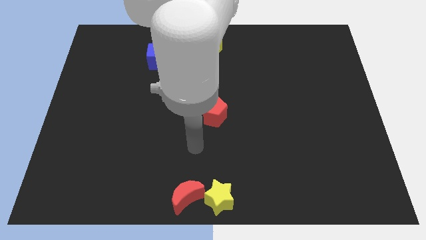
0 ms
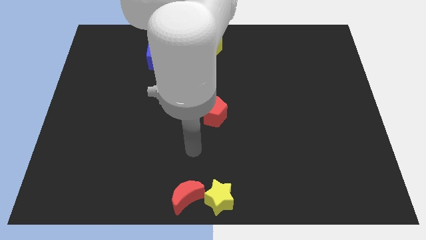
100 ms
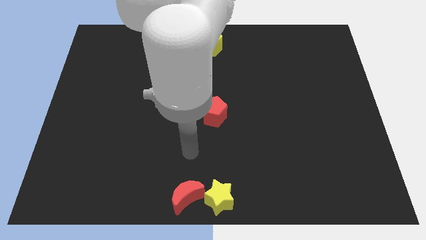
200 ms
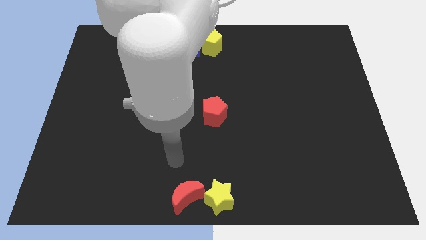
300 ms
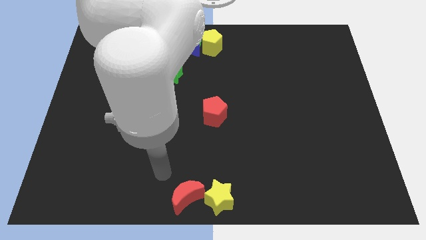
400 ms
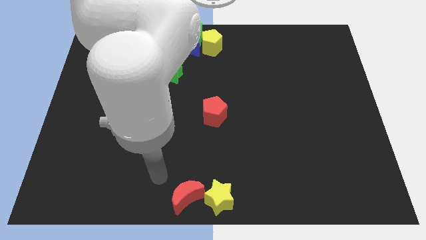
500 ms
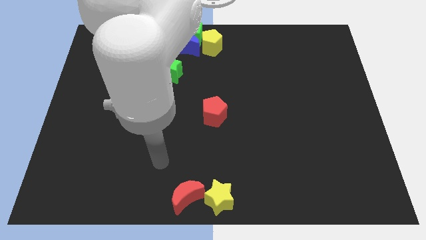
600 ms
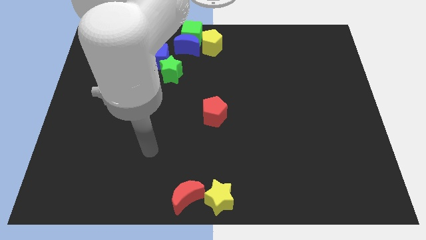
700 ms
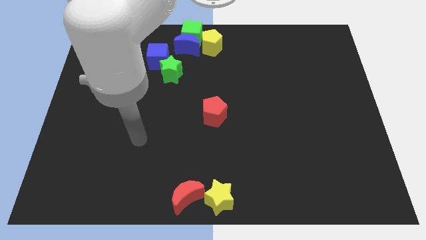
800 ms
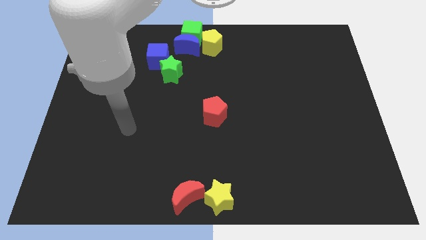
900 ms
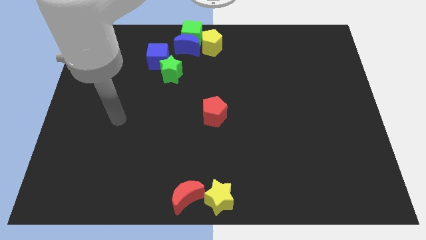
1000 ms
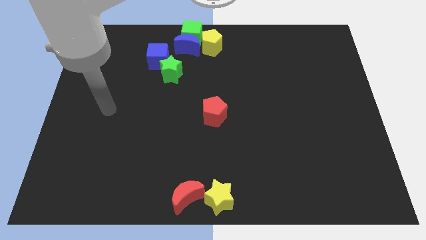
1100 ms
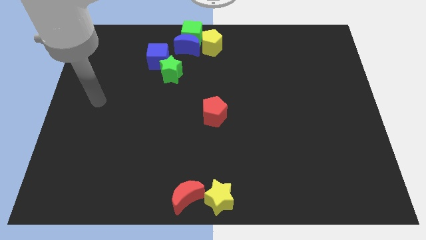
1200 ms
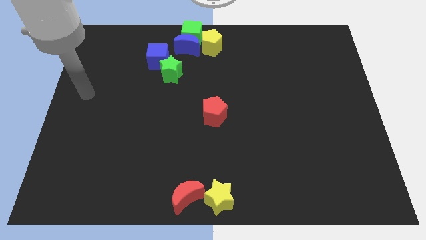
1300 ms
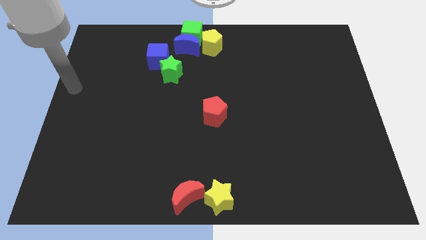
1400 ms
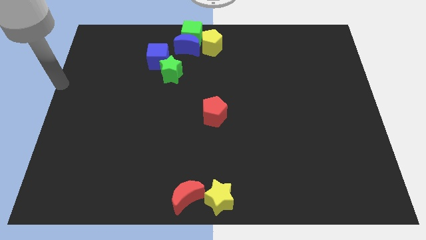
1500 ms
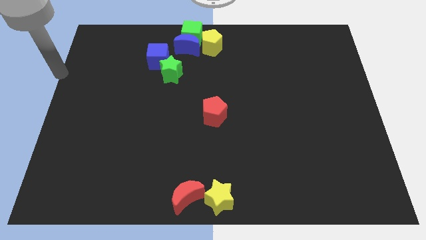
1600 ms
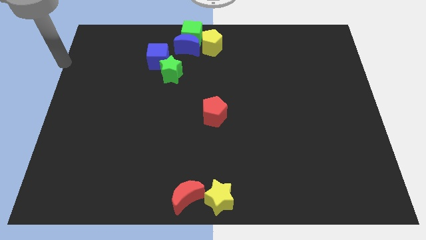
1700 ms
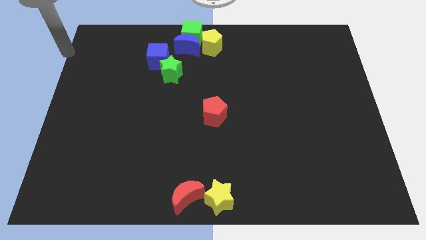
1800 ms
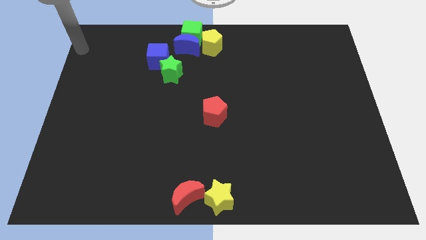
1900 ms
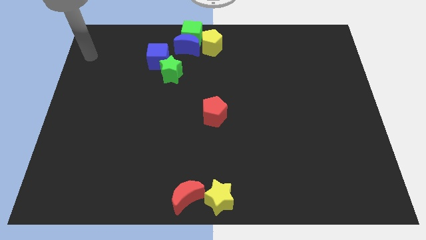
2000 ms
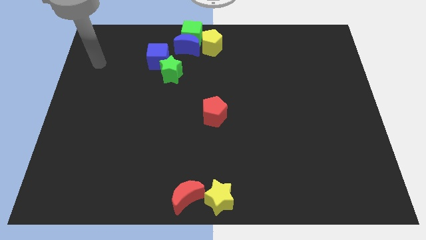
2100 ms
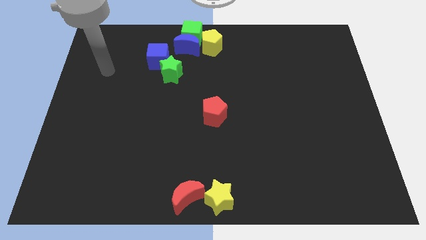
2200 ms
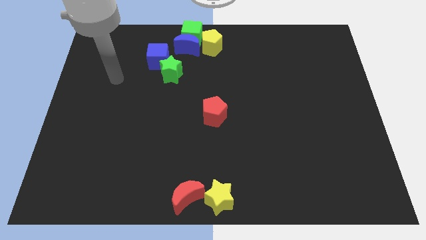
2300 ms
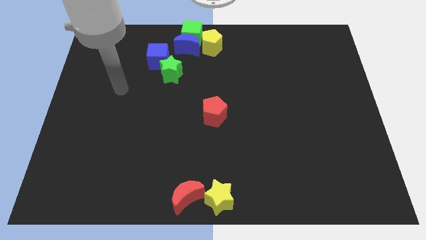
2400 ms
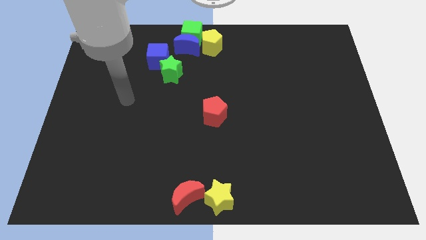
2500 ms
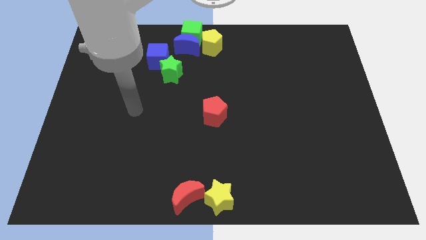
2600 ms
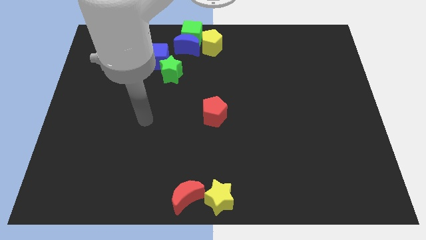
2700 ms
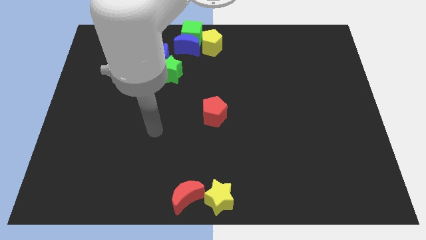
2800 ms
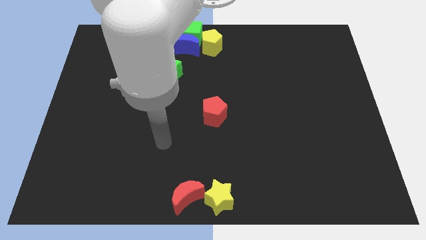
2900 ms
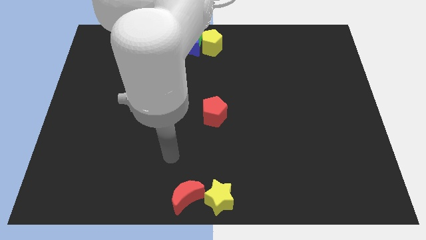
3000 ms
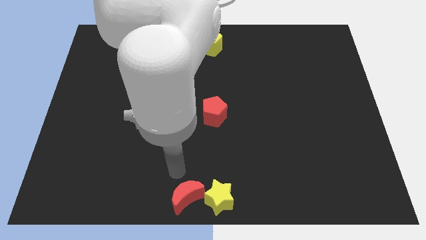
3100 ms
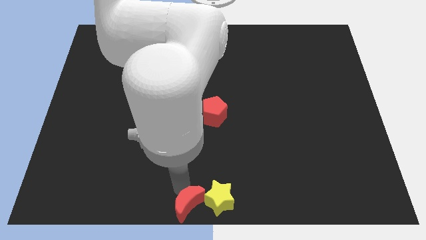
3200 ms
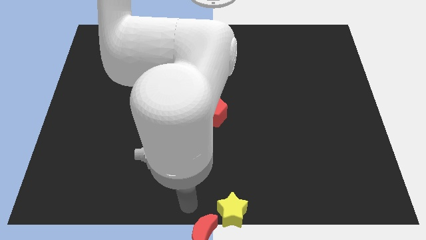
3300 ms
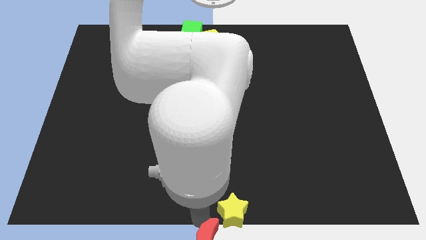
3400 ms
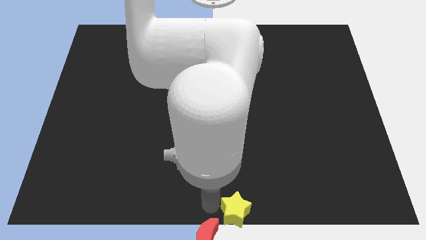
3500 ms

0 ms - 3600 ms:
push the red crescent downwards at the bottom center of the table

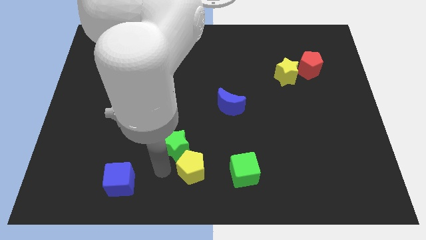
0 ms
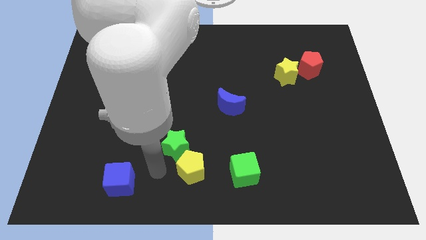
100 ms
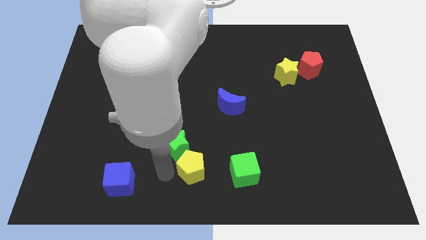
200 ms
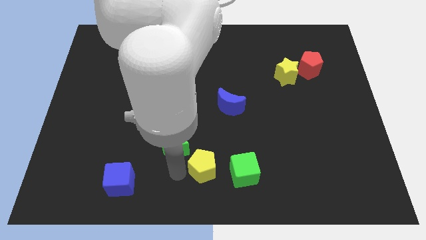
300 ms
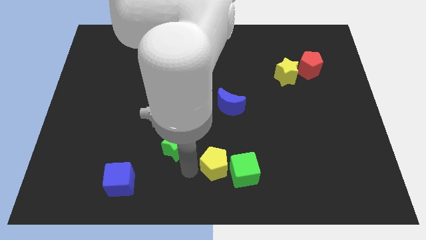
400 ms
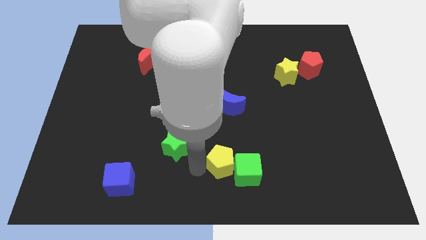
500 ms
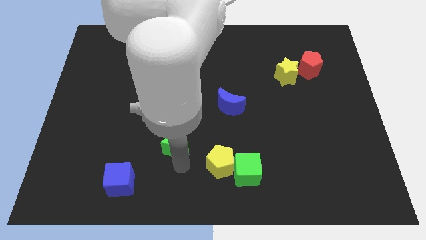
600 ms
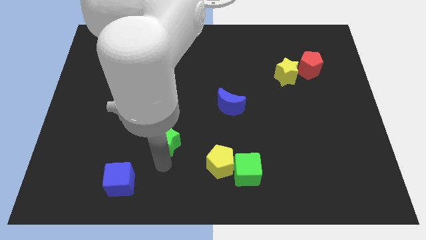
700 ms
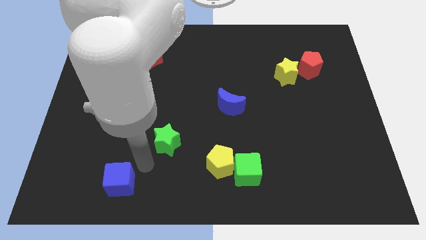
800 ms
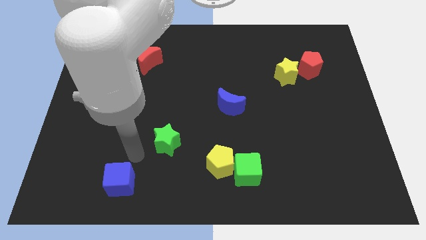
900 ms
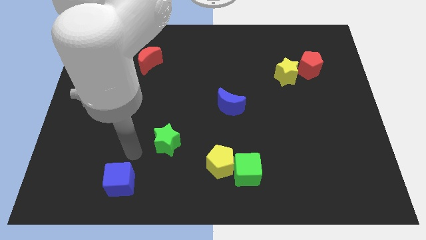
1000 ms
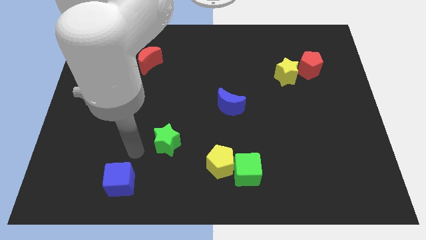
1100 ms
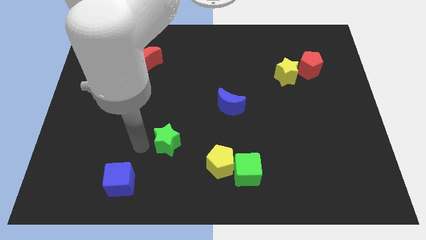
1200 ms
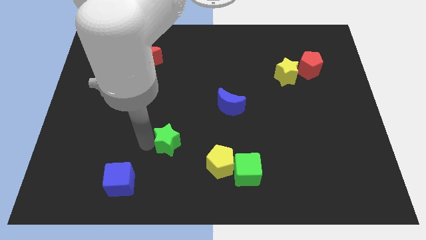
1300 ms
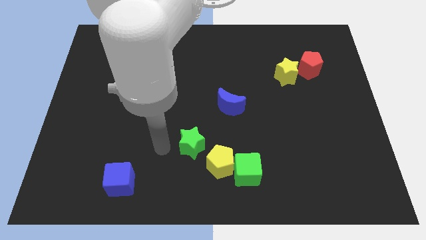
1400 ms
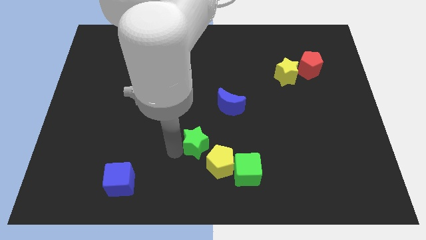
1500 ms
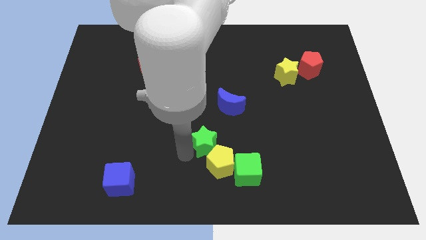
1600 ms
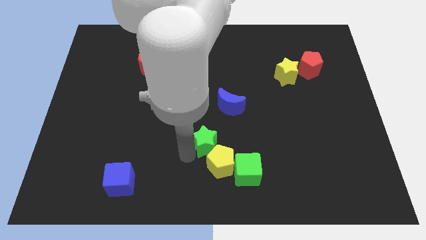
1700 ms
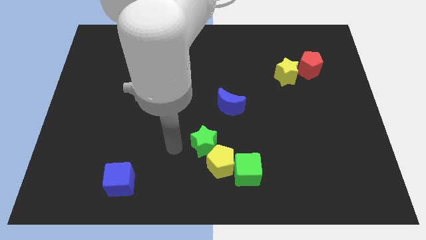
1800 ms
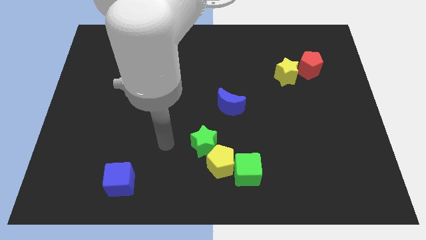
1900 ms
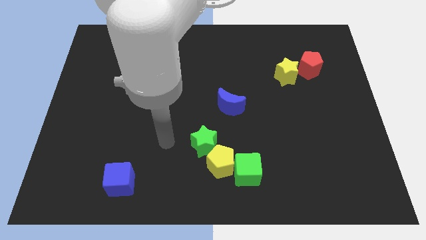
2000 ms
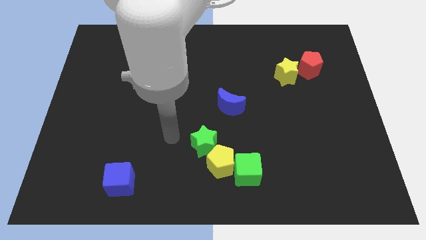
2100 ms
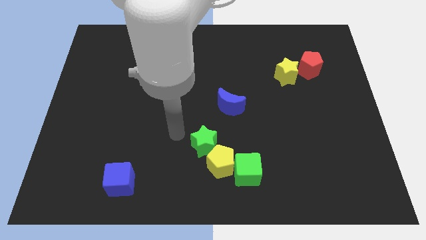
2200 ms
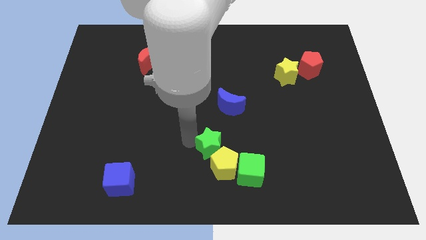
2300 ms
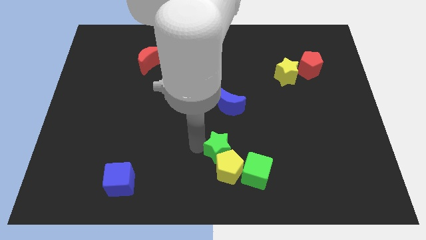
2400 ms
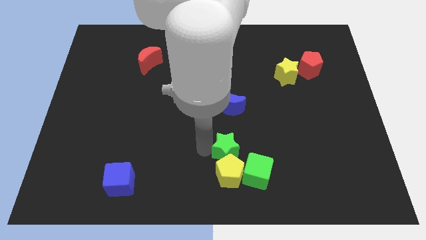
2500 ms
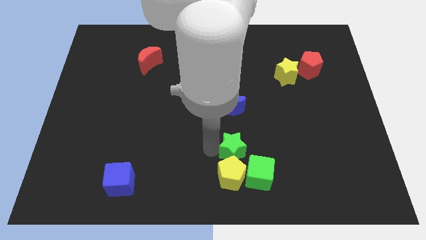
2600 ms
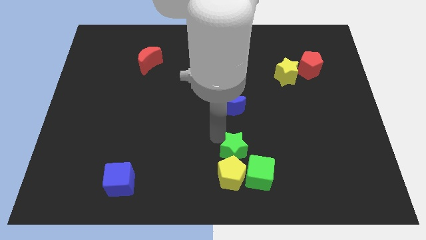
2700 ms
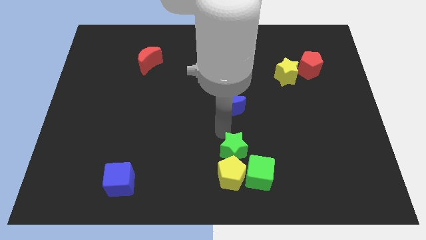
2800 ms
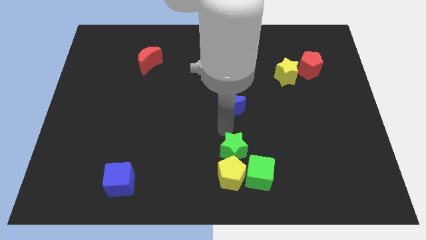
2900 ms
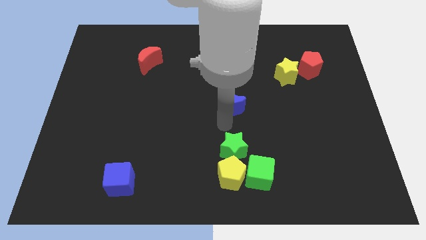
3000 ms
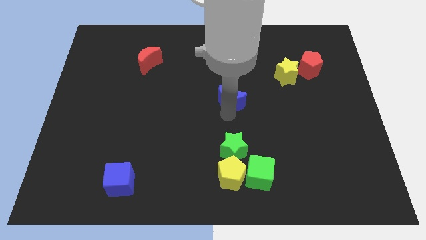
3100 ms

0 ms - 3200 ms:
slide the green star and yellow pentagon vertically below the blue crescent

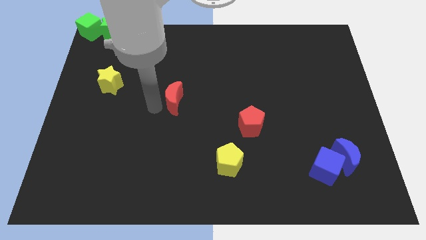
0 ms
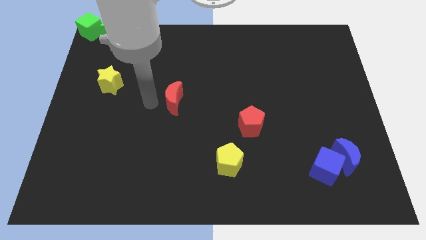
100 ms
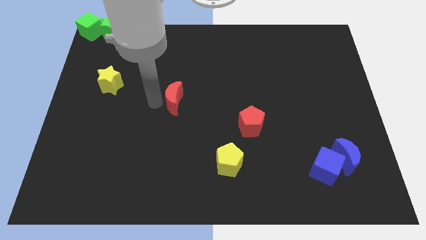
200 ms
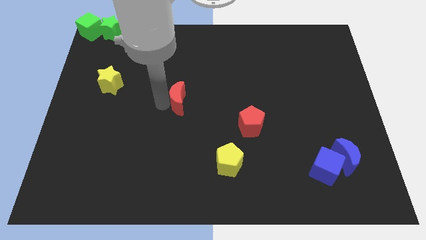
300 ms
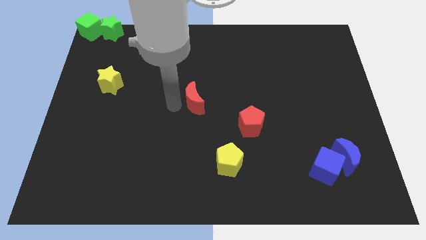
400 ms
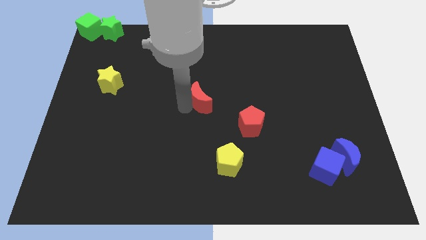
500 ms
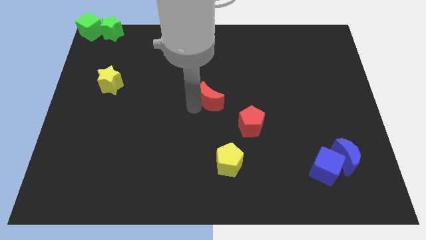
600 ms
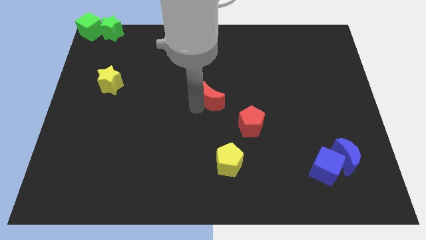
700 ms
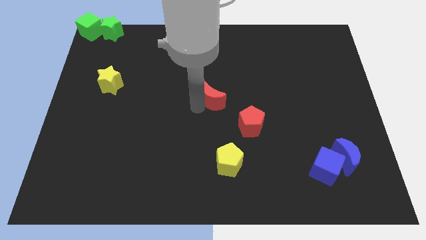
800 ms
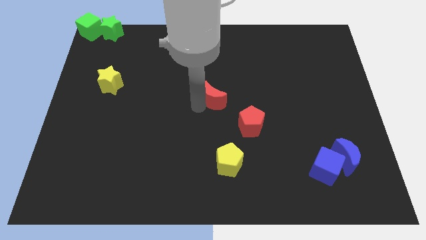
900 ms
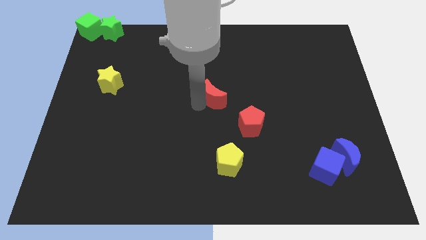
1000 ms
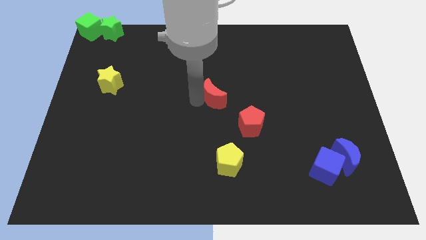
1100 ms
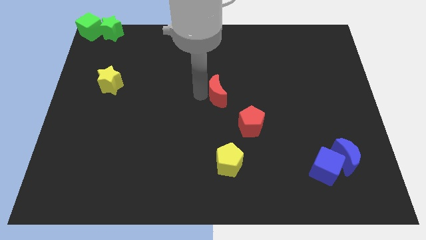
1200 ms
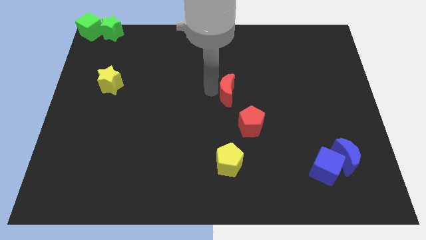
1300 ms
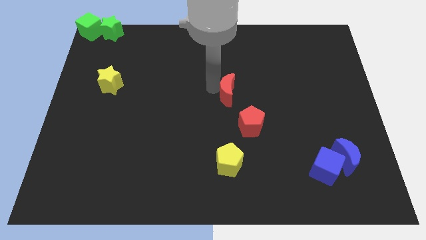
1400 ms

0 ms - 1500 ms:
push red crescent above yellow pentagon

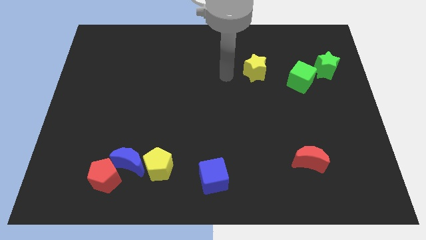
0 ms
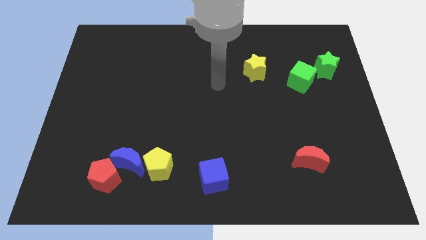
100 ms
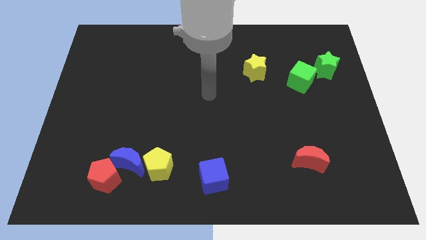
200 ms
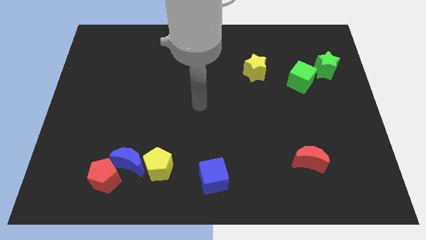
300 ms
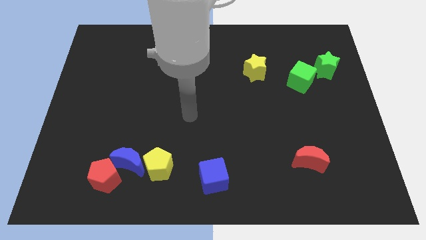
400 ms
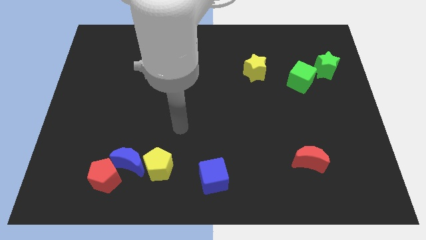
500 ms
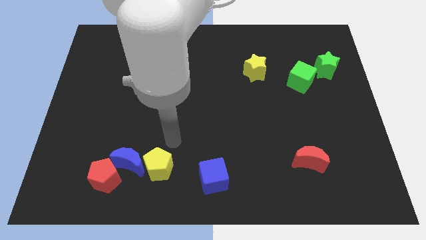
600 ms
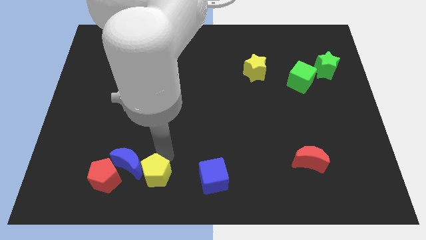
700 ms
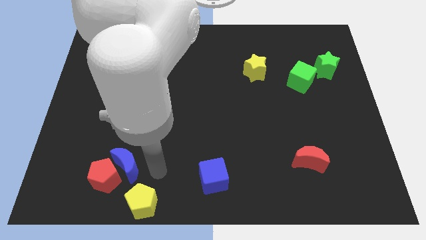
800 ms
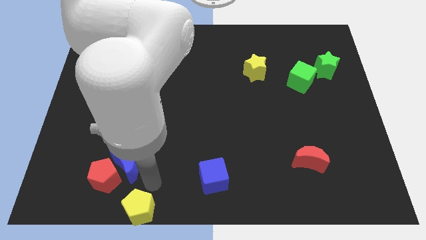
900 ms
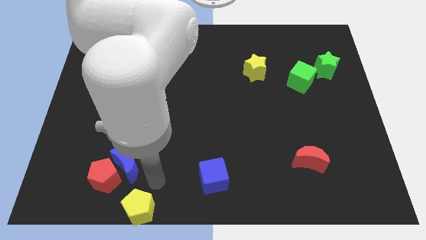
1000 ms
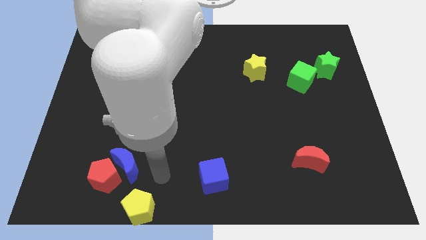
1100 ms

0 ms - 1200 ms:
separate the yellow pentagon from the blue moon
